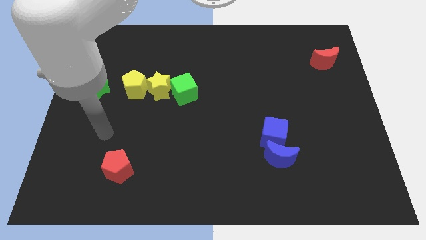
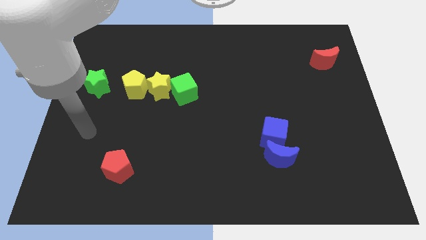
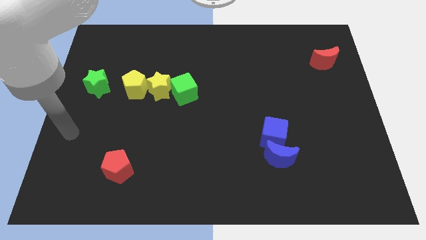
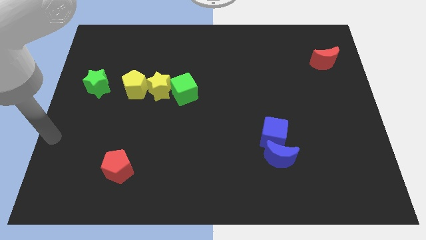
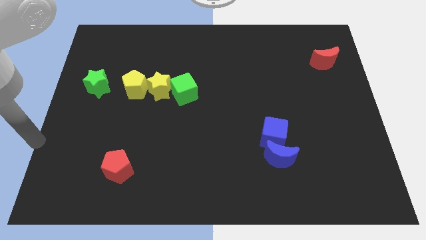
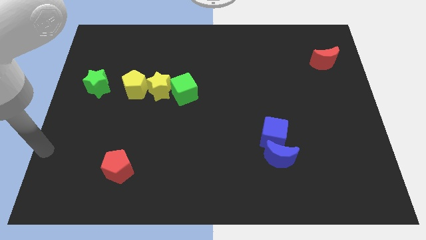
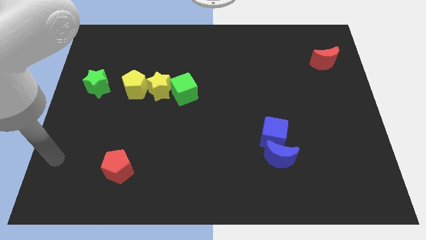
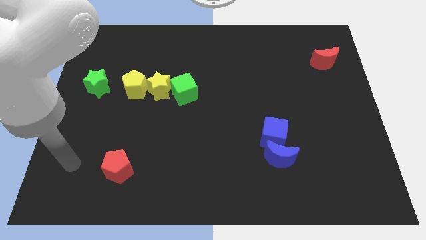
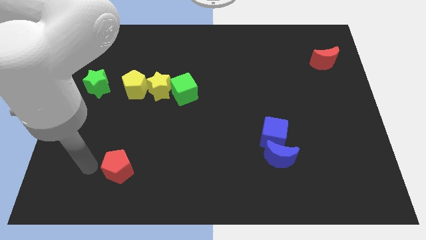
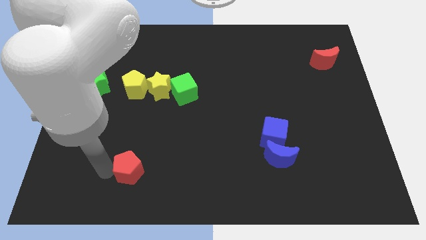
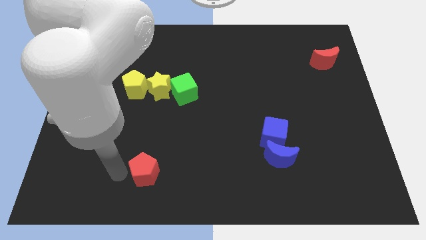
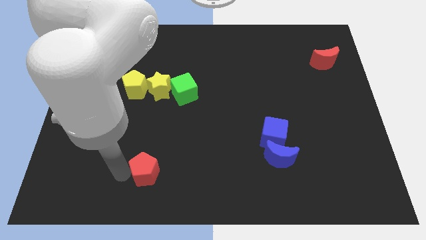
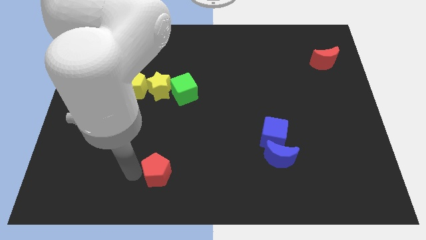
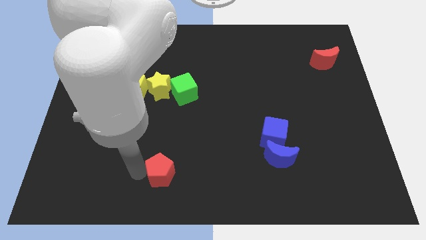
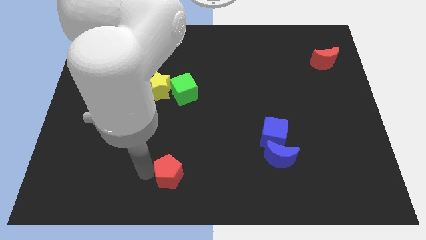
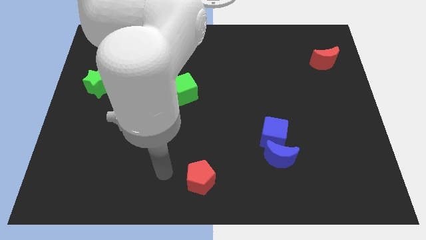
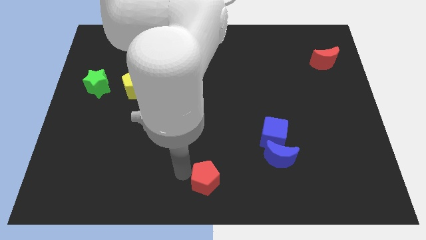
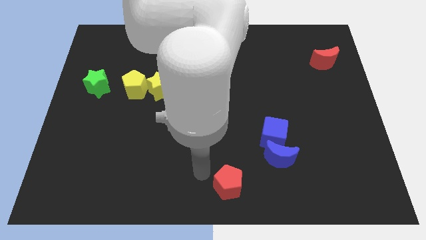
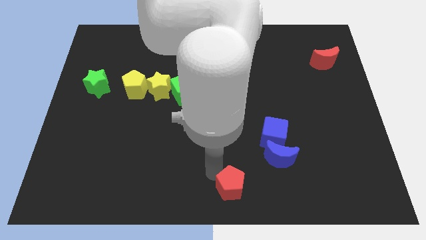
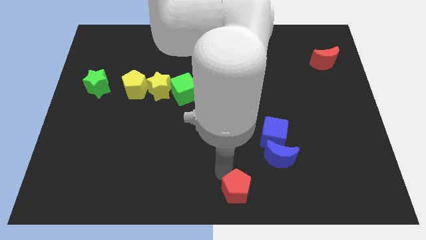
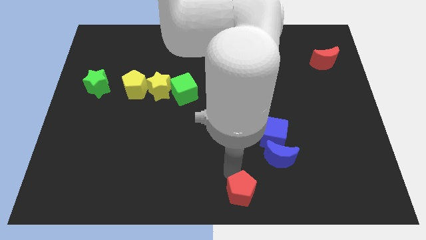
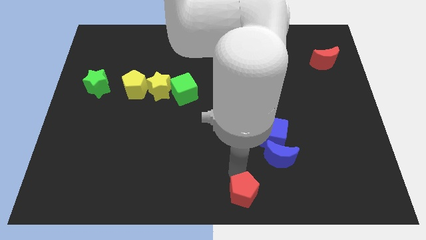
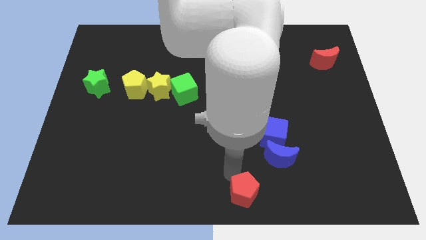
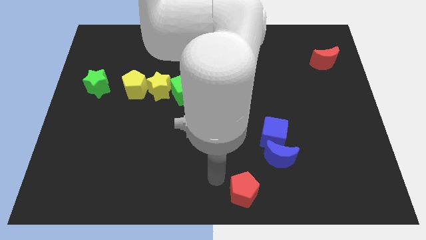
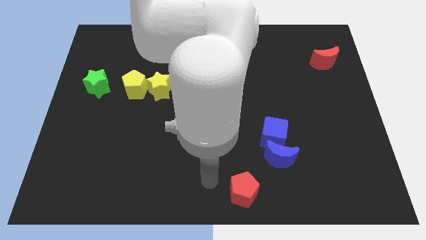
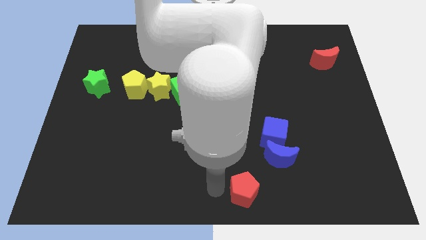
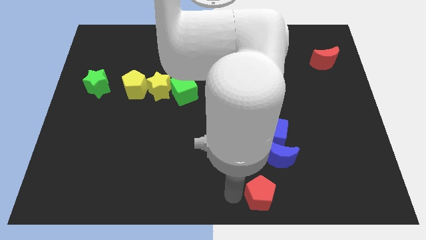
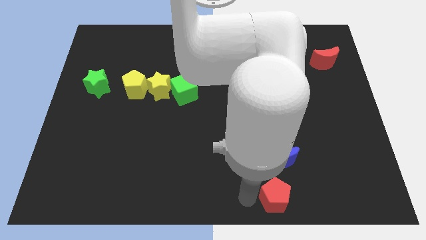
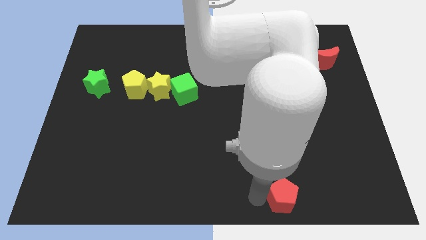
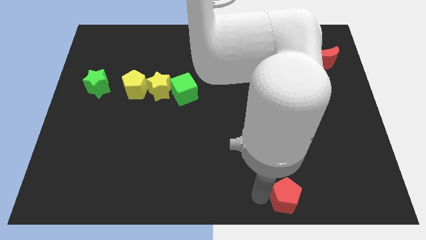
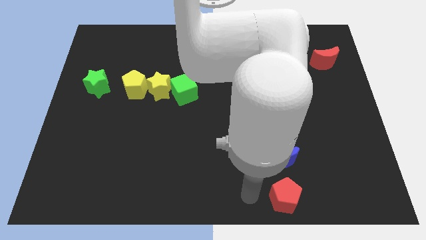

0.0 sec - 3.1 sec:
place red pentagon below to the blue blocks

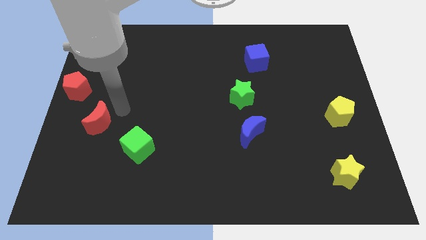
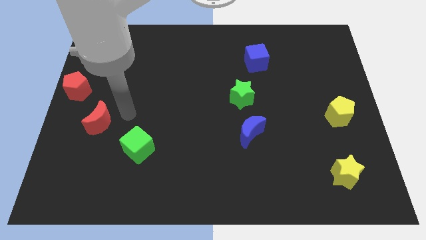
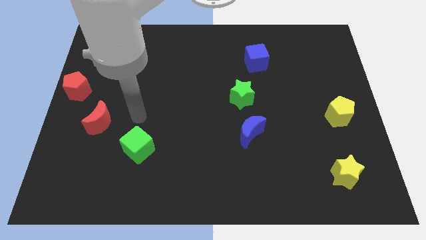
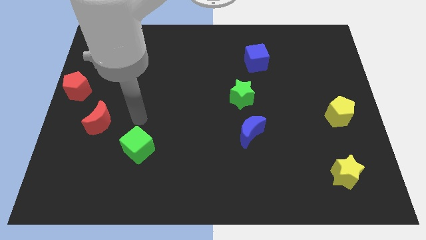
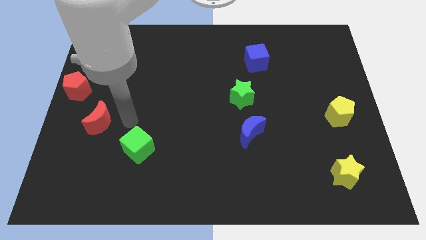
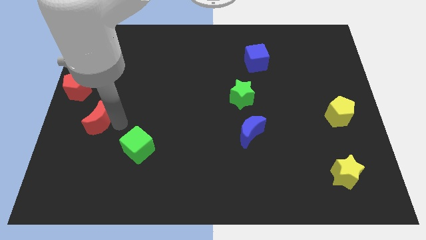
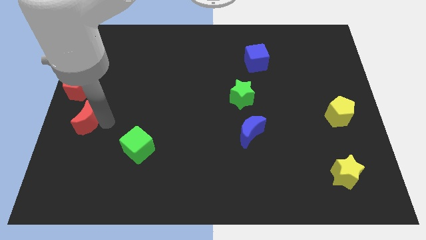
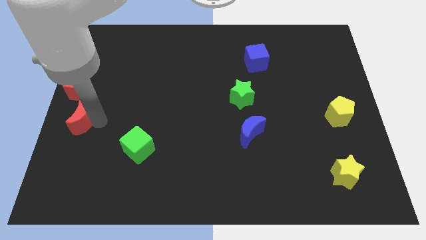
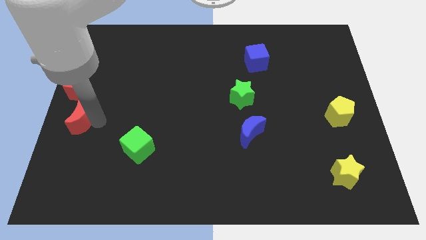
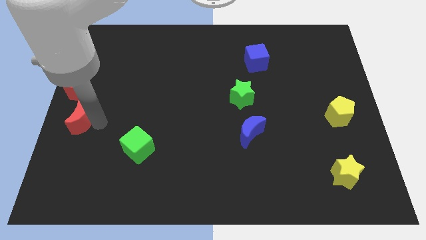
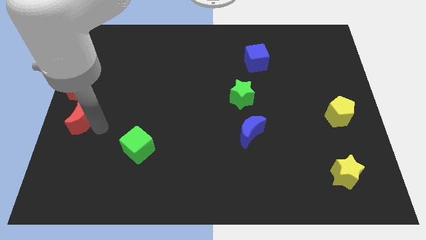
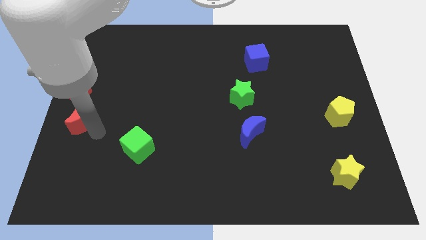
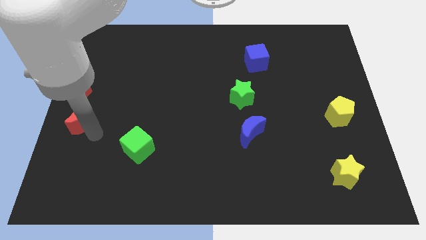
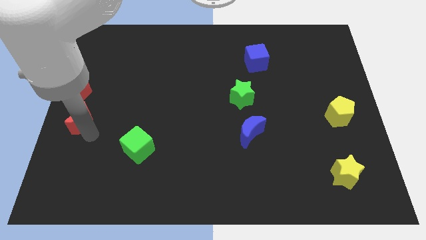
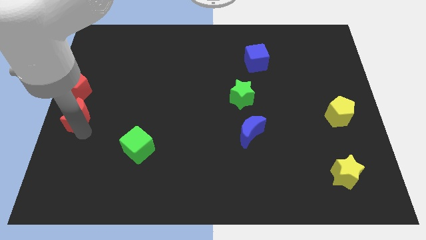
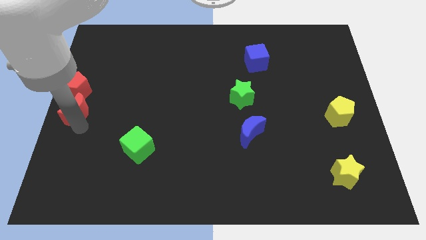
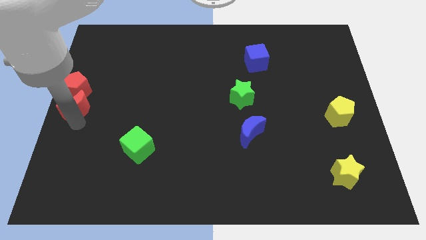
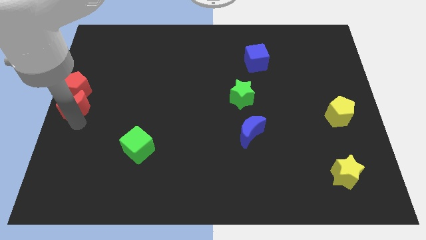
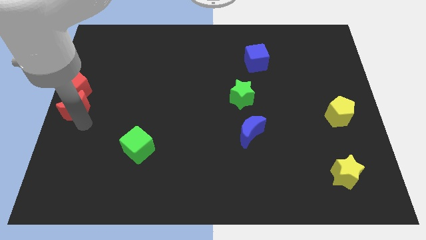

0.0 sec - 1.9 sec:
push the red moon into red pentagon

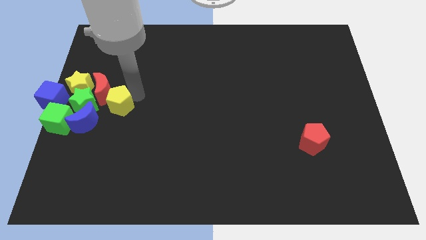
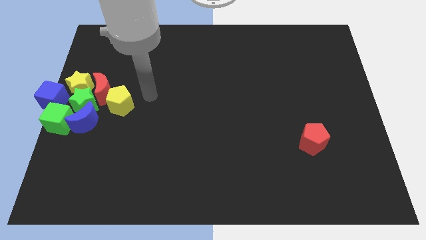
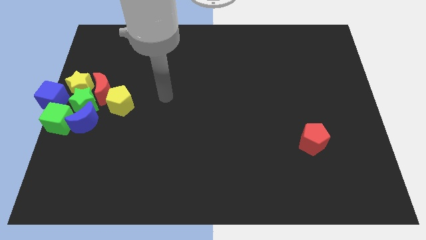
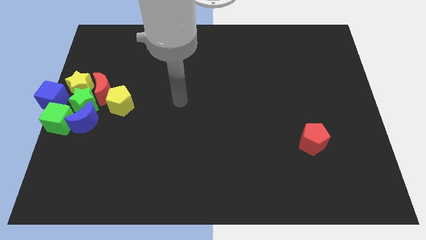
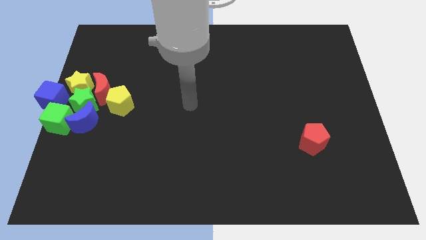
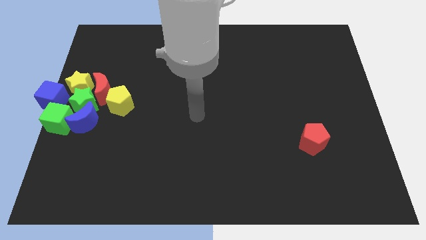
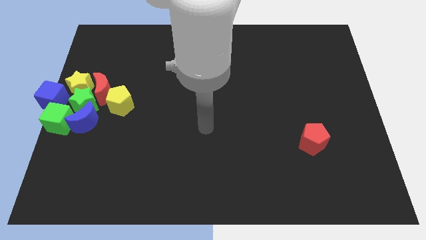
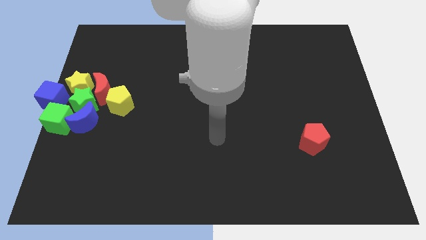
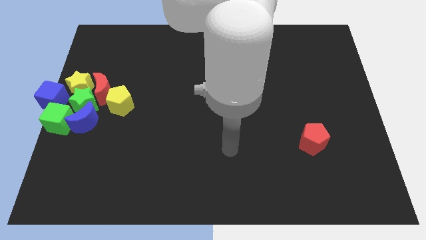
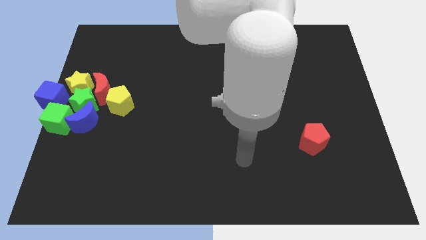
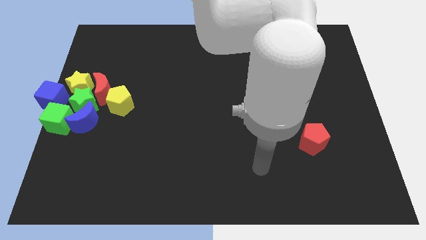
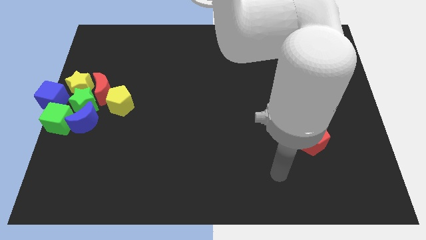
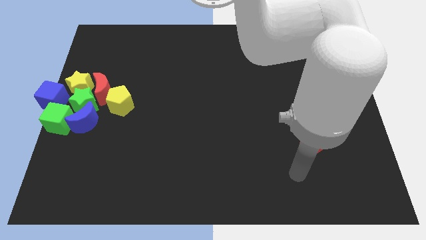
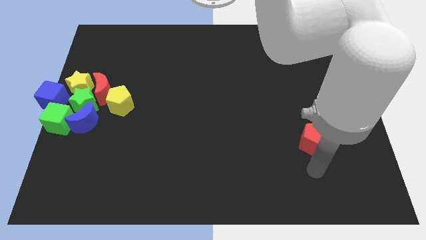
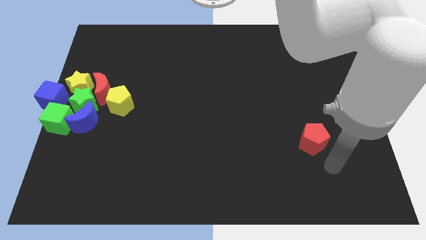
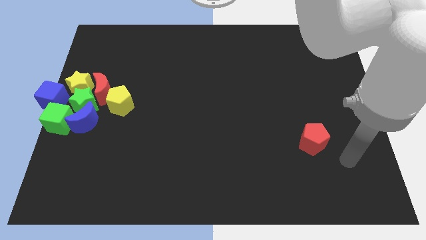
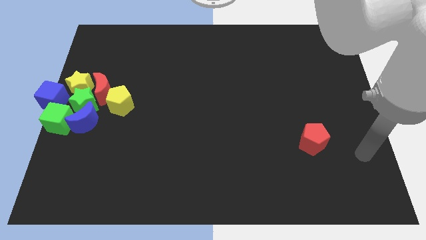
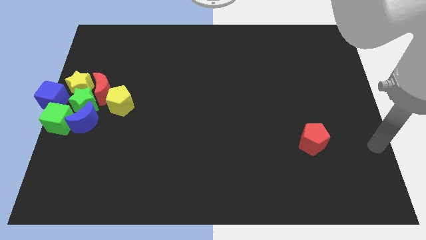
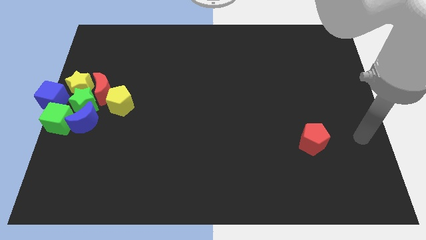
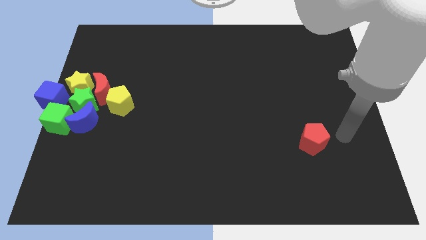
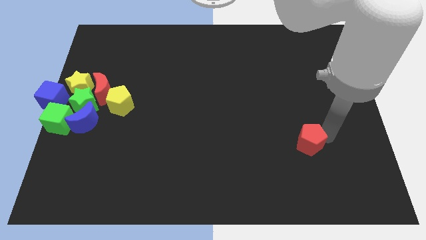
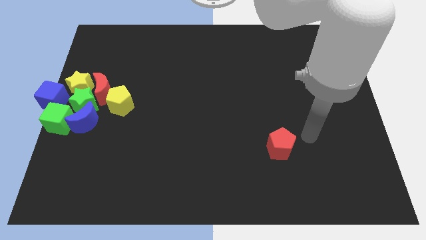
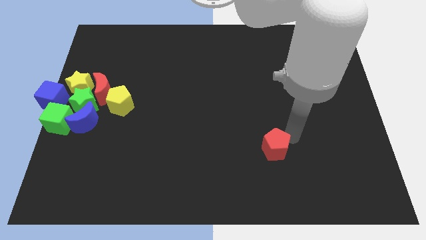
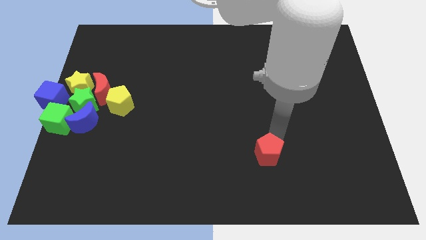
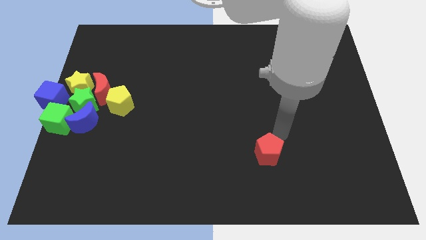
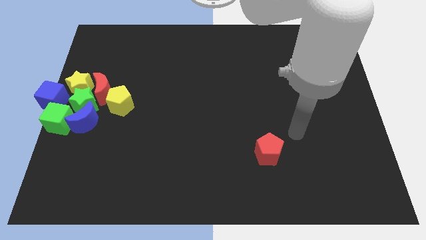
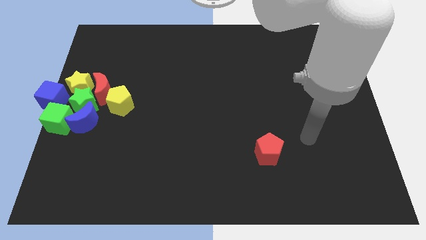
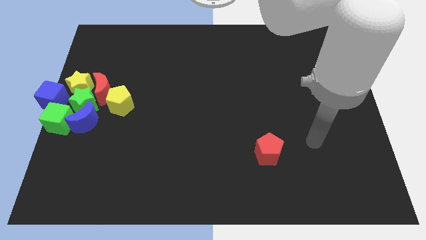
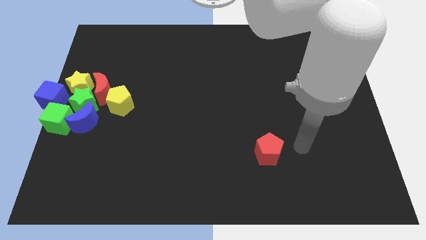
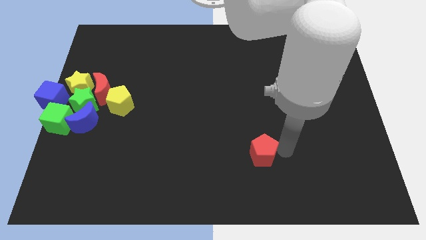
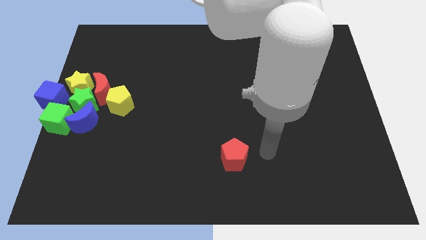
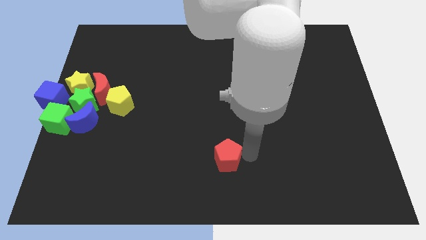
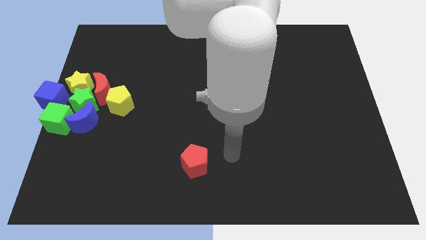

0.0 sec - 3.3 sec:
move the red pentagon to the left side of the table

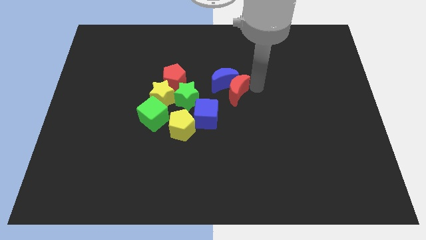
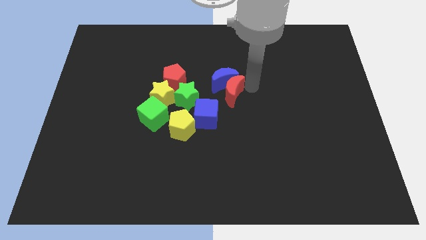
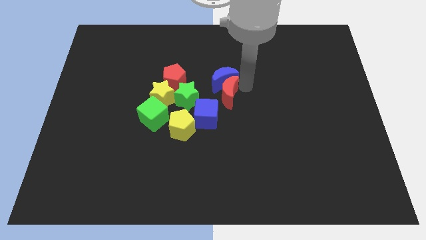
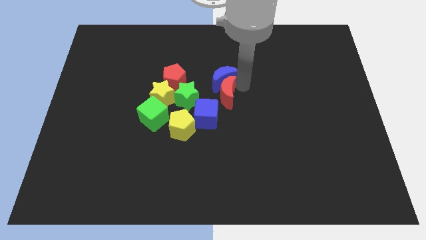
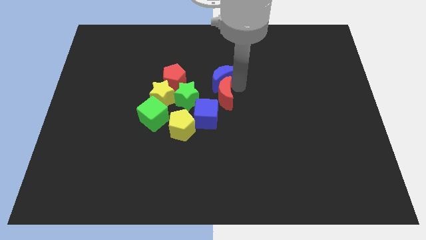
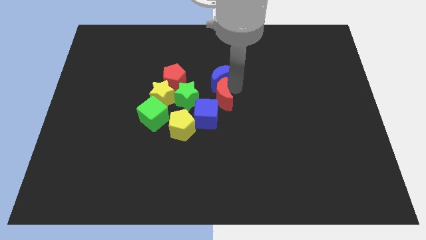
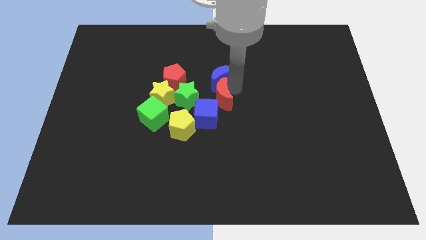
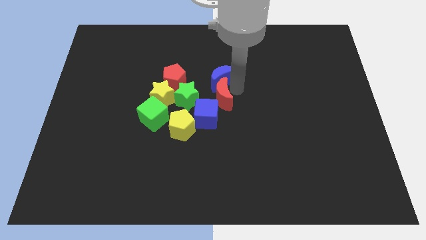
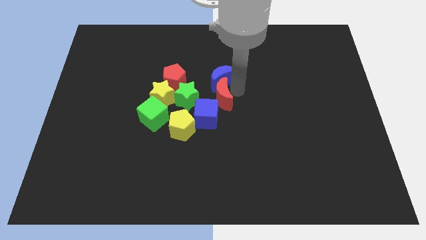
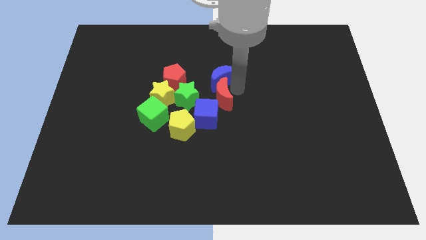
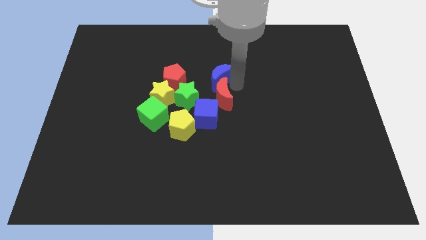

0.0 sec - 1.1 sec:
slide red moon below the blue moon
